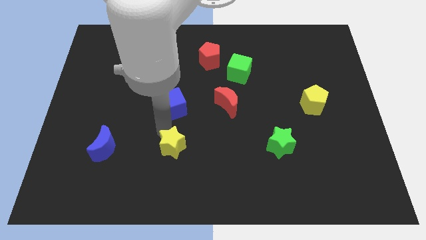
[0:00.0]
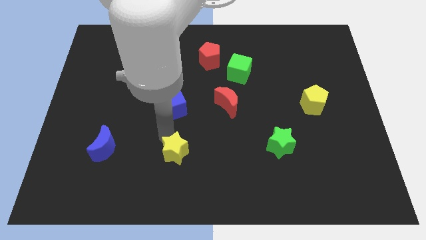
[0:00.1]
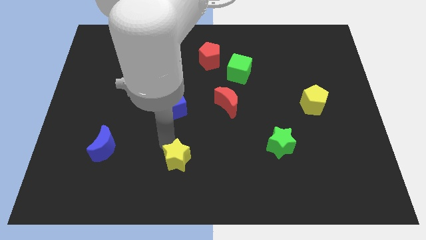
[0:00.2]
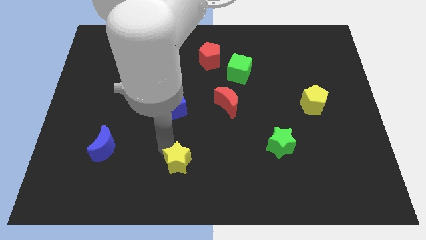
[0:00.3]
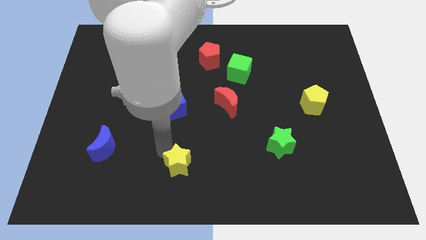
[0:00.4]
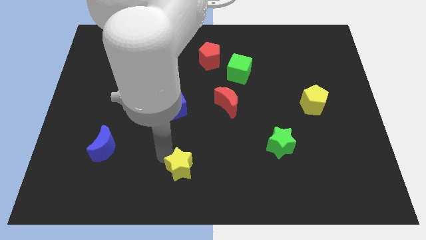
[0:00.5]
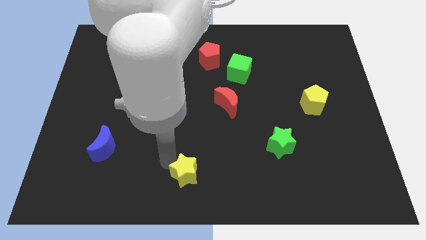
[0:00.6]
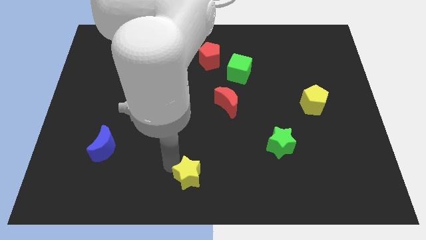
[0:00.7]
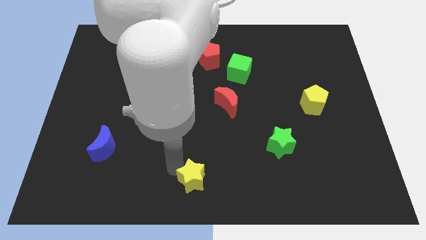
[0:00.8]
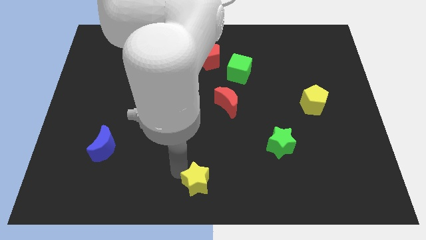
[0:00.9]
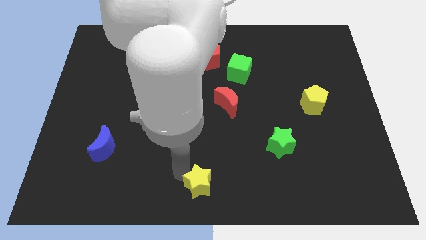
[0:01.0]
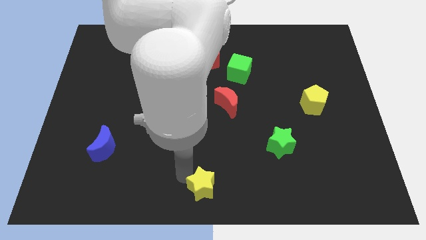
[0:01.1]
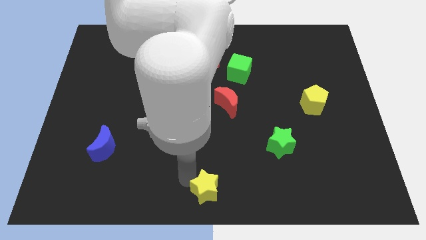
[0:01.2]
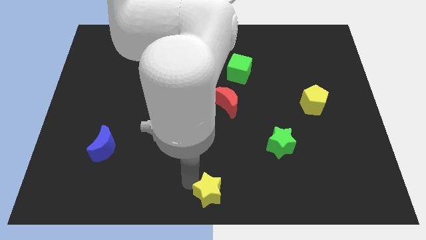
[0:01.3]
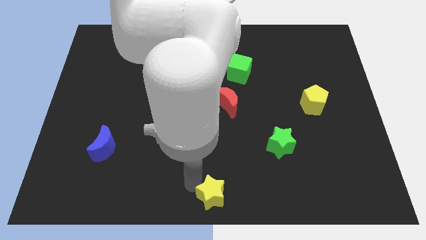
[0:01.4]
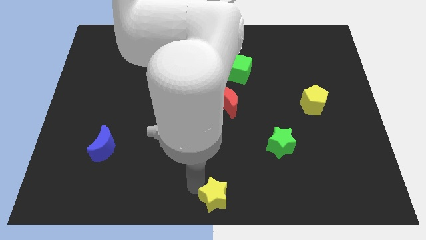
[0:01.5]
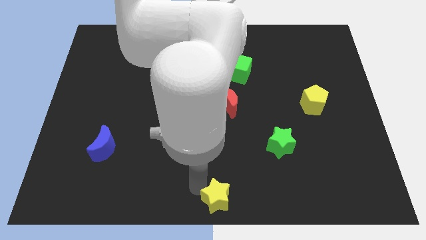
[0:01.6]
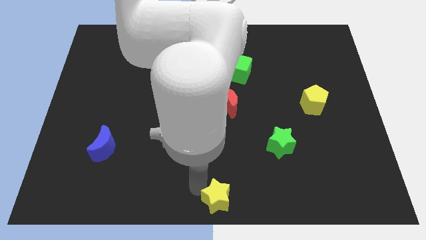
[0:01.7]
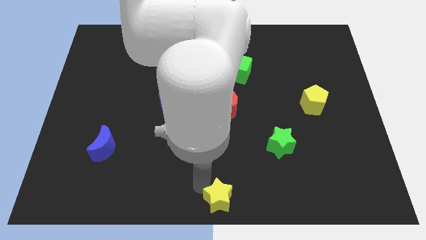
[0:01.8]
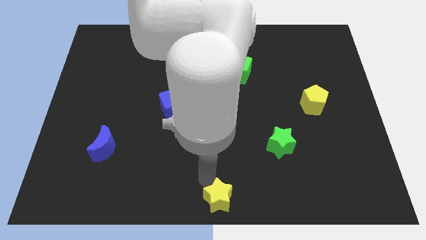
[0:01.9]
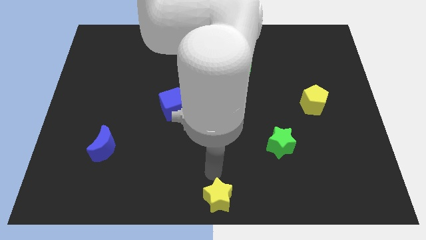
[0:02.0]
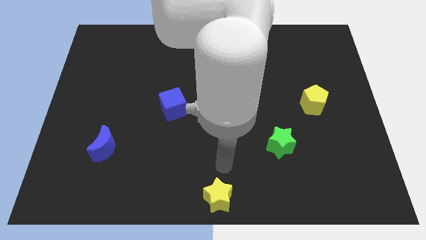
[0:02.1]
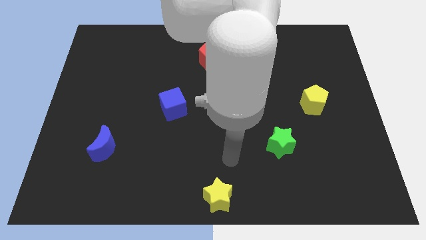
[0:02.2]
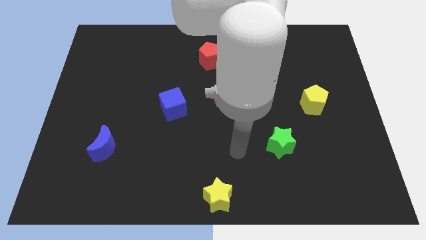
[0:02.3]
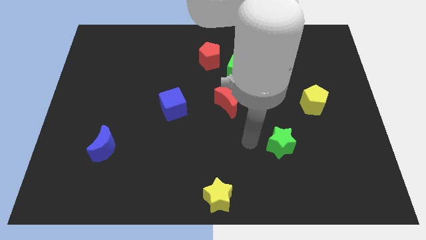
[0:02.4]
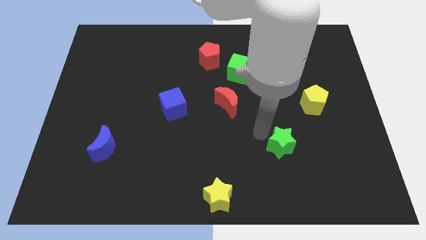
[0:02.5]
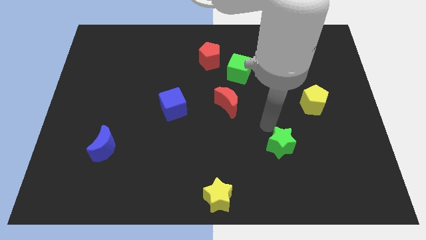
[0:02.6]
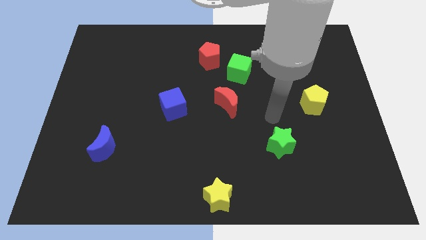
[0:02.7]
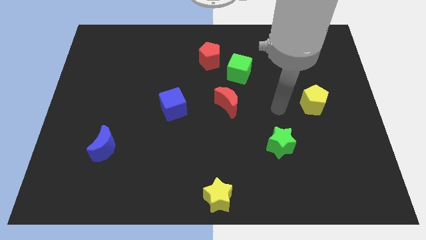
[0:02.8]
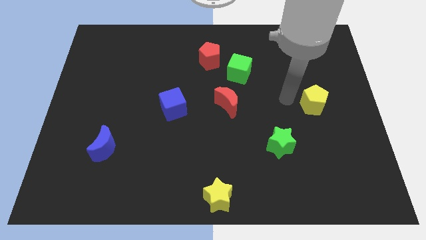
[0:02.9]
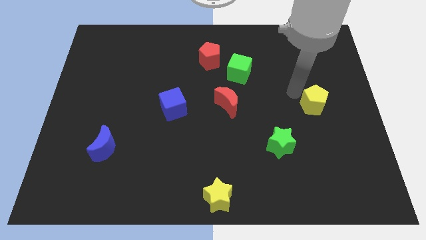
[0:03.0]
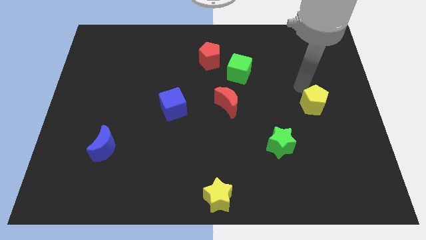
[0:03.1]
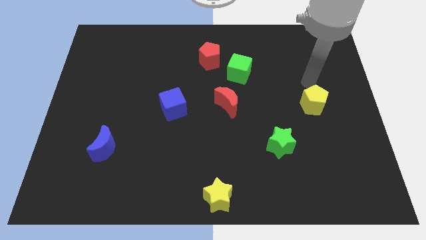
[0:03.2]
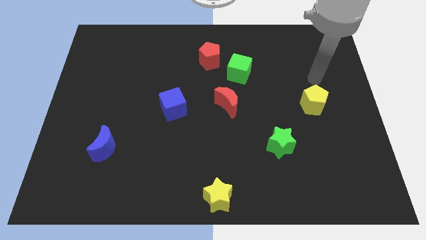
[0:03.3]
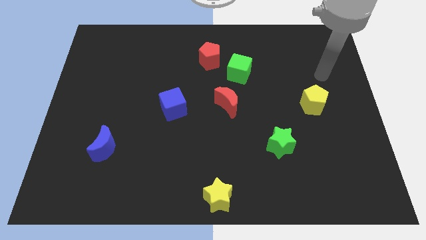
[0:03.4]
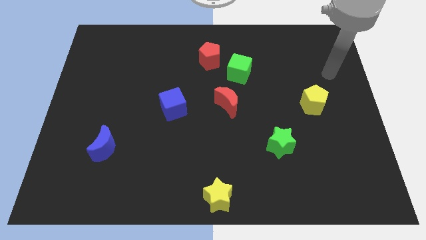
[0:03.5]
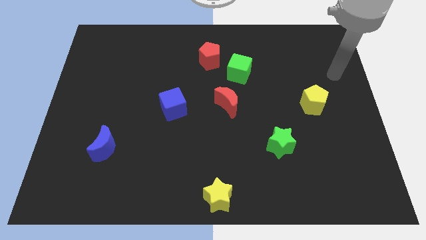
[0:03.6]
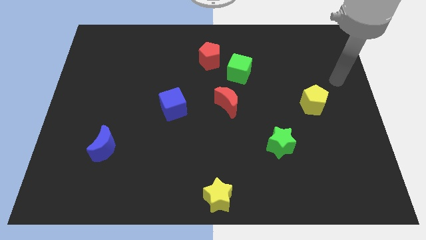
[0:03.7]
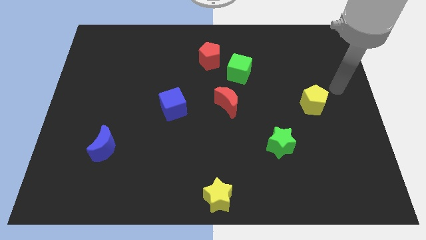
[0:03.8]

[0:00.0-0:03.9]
place the yellow star at the bottom center of the board

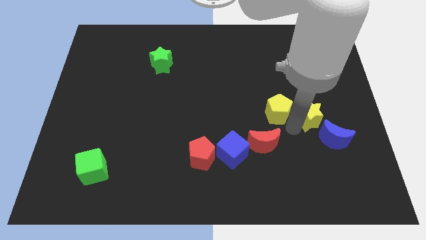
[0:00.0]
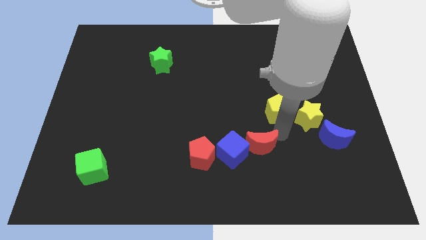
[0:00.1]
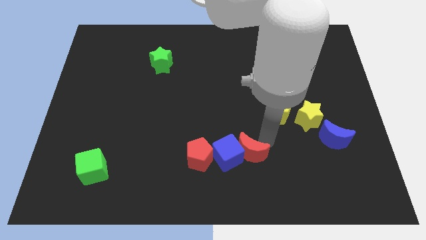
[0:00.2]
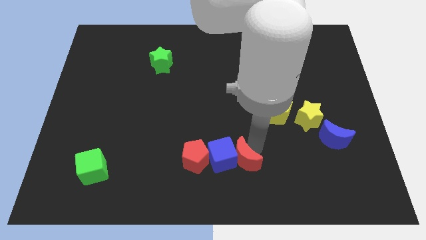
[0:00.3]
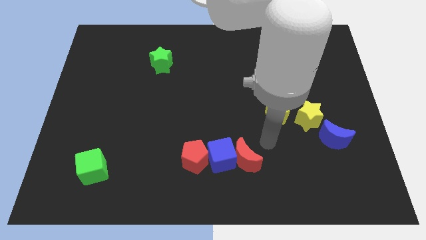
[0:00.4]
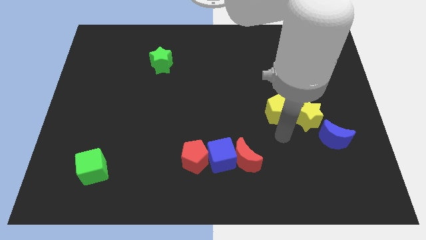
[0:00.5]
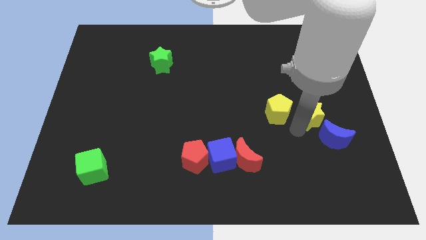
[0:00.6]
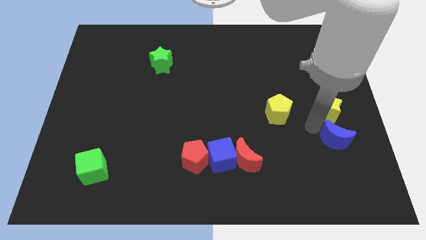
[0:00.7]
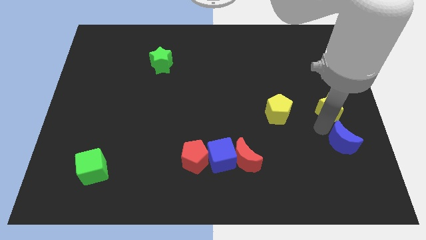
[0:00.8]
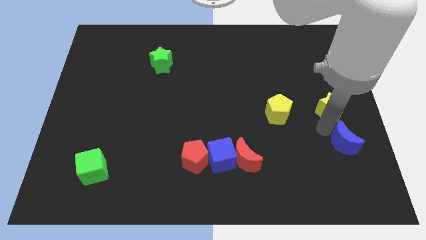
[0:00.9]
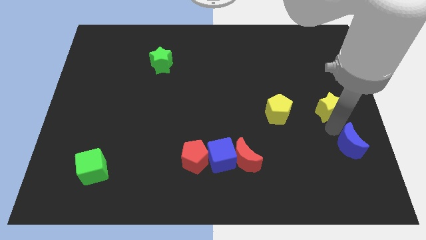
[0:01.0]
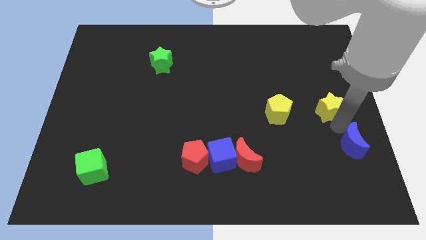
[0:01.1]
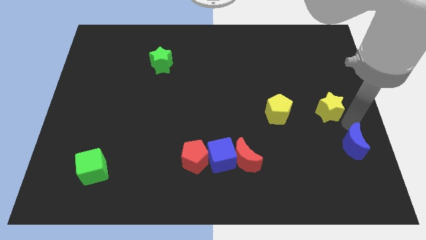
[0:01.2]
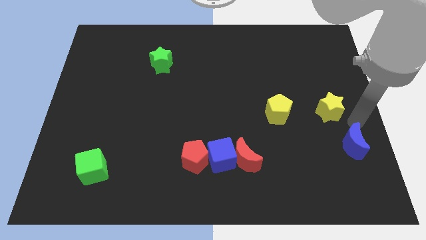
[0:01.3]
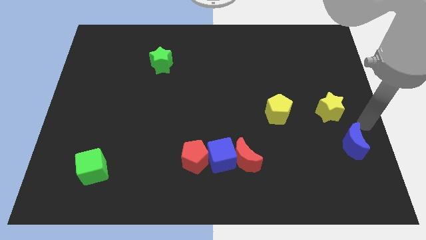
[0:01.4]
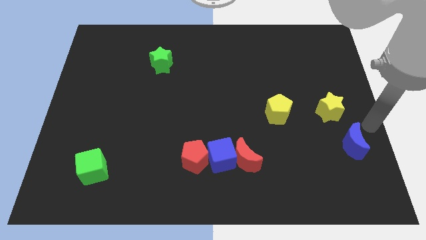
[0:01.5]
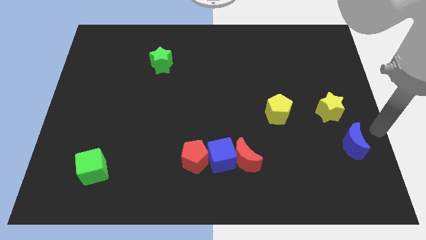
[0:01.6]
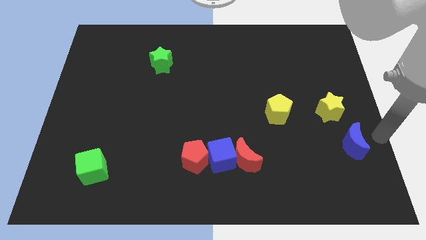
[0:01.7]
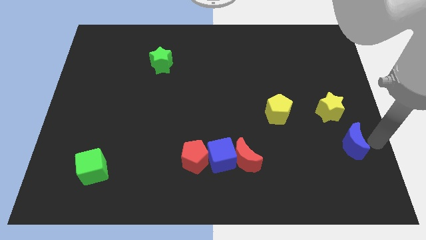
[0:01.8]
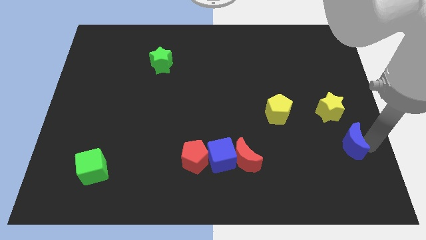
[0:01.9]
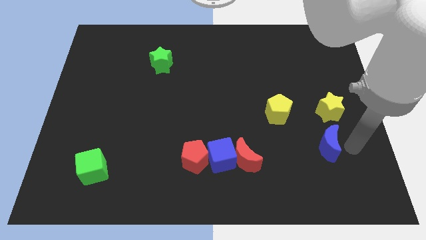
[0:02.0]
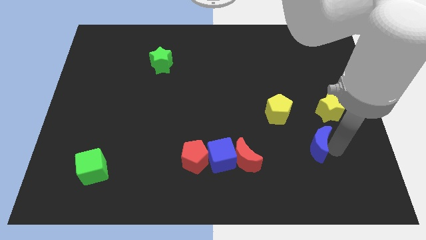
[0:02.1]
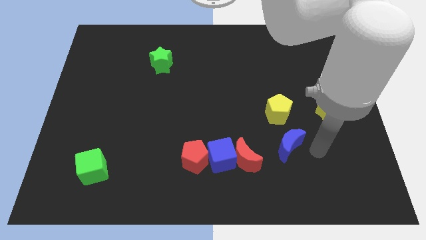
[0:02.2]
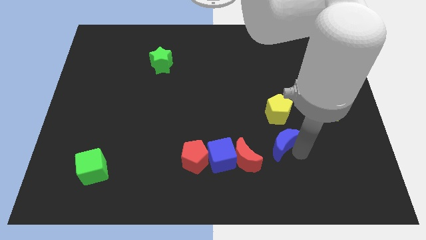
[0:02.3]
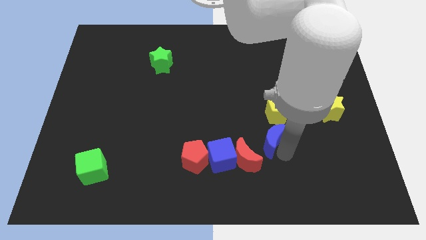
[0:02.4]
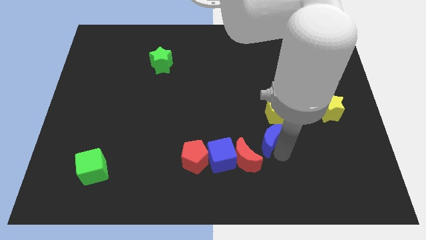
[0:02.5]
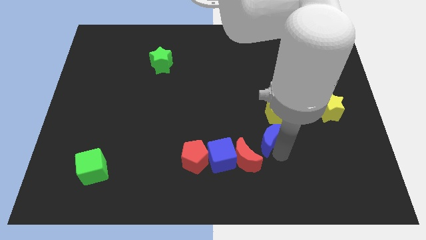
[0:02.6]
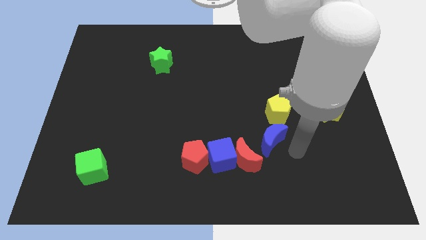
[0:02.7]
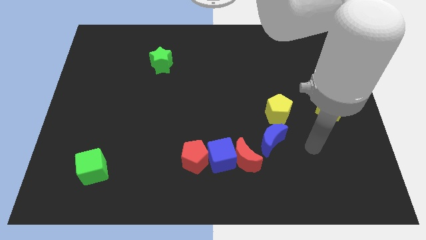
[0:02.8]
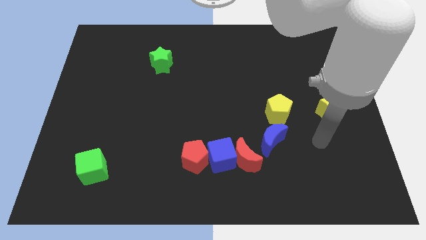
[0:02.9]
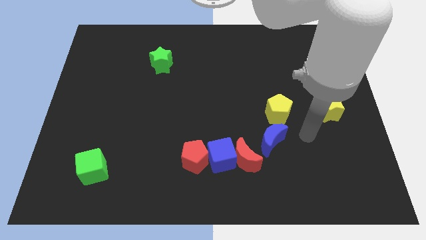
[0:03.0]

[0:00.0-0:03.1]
push the blue moon at the bottom side of the yellow pentagon

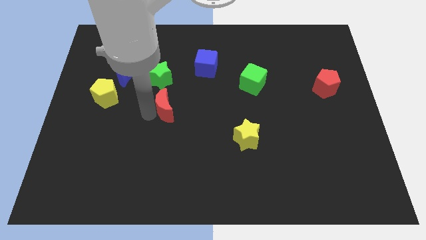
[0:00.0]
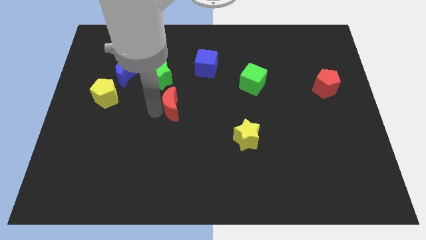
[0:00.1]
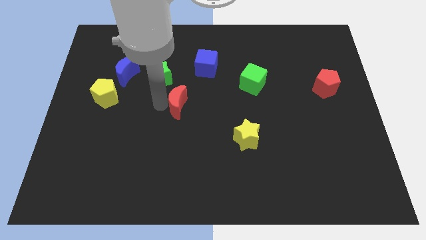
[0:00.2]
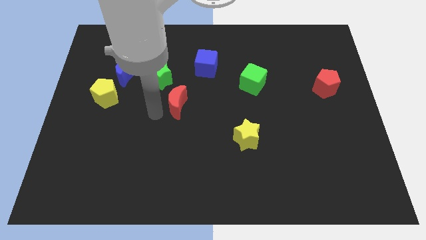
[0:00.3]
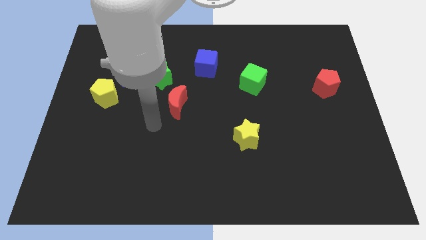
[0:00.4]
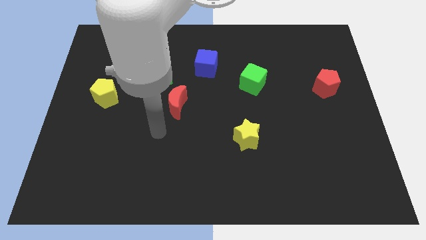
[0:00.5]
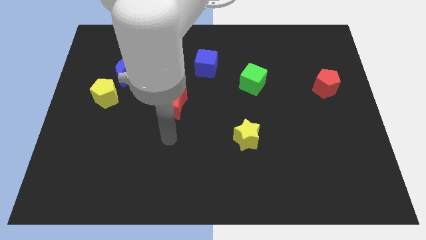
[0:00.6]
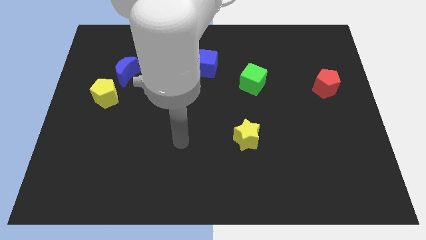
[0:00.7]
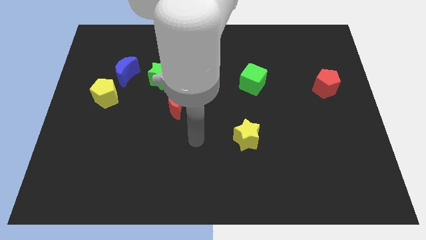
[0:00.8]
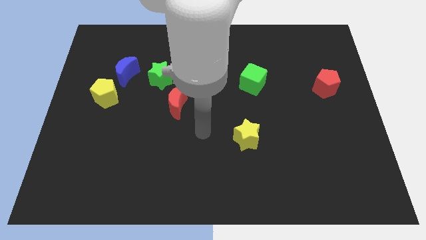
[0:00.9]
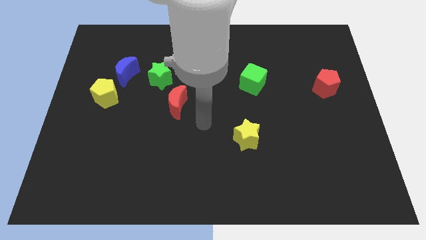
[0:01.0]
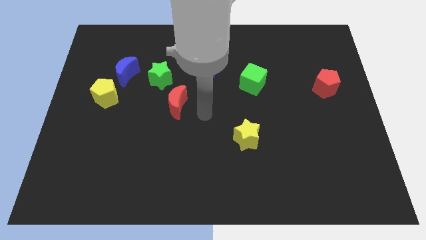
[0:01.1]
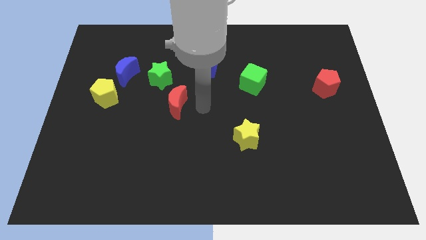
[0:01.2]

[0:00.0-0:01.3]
move the arm to the right side of the red moon

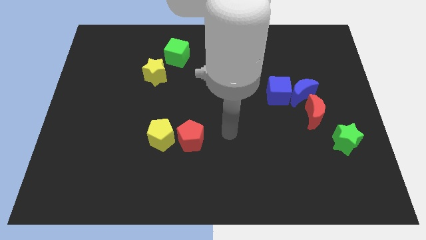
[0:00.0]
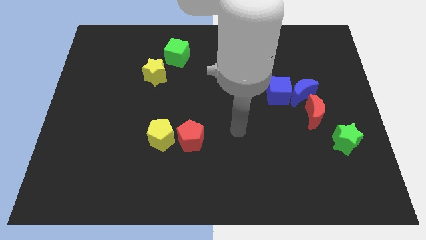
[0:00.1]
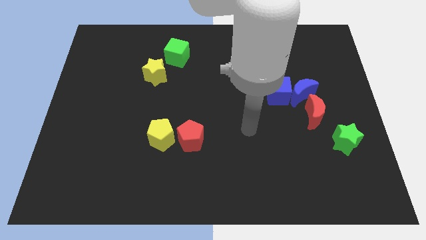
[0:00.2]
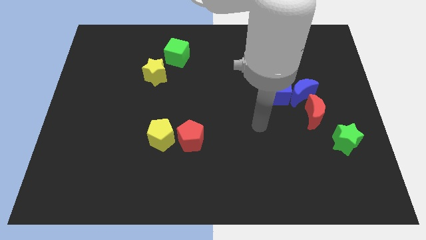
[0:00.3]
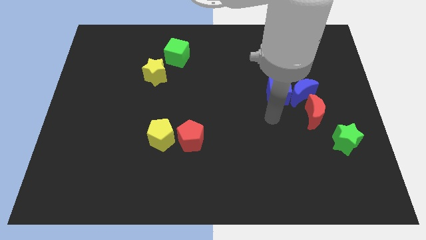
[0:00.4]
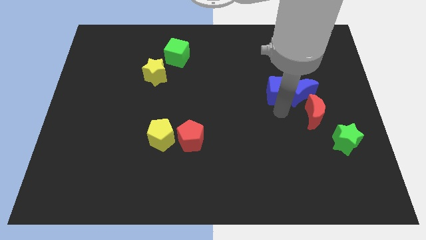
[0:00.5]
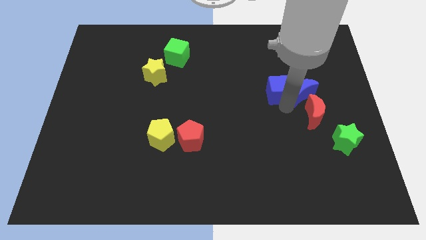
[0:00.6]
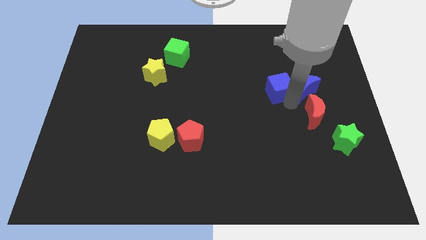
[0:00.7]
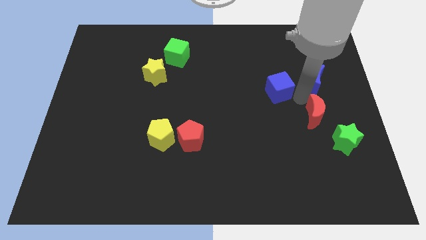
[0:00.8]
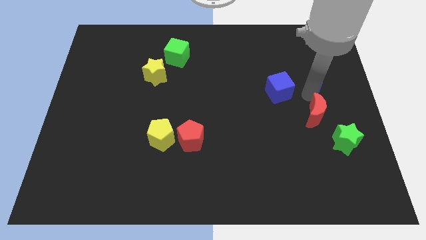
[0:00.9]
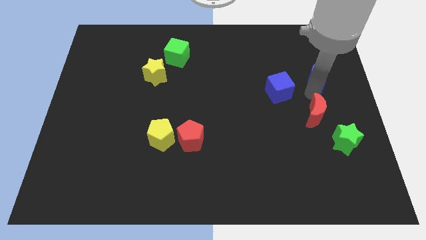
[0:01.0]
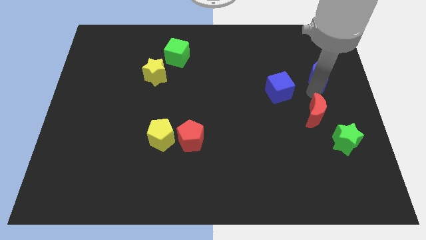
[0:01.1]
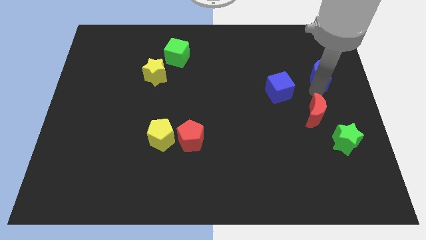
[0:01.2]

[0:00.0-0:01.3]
separate the blue crescent from the blue cube
